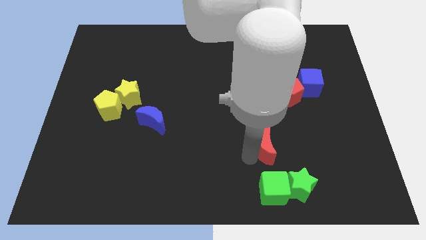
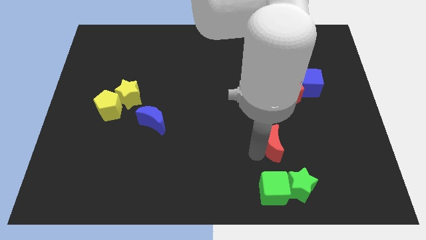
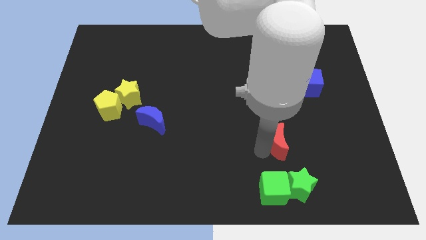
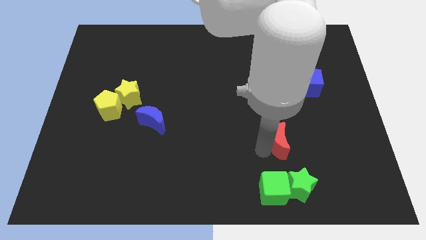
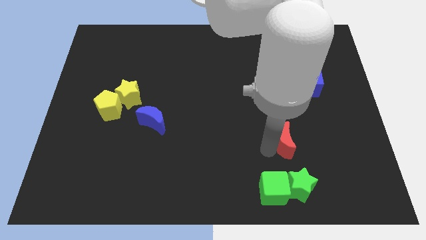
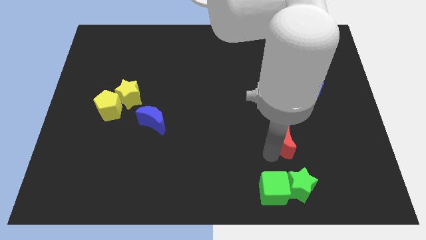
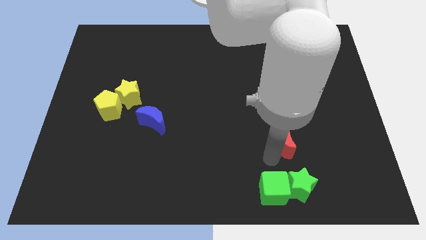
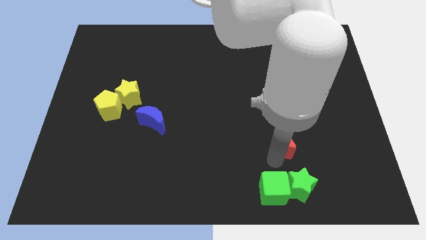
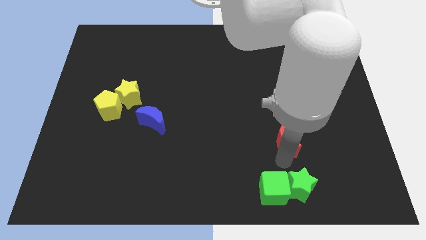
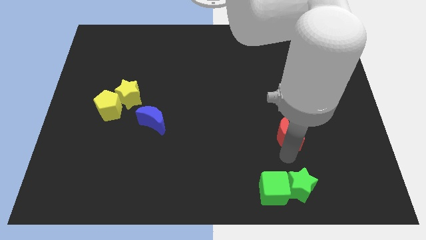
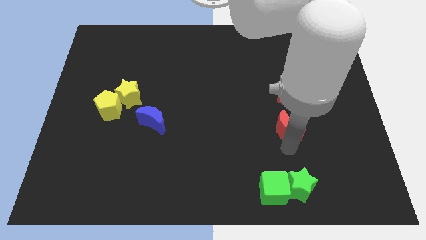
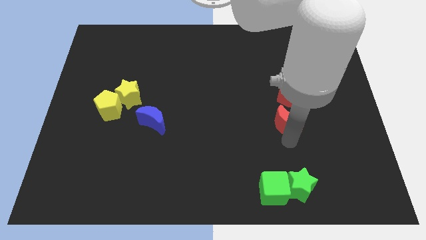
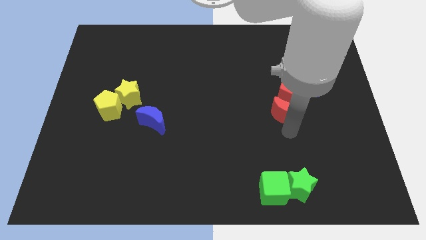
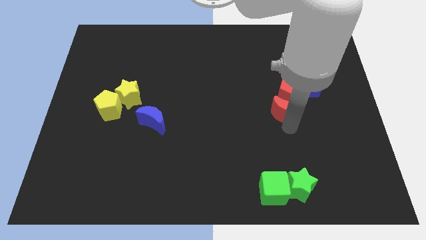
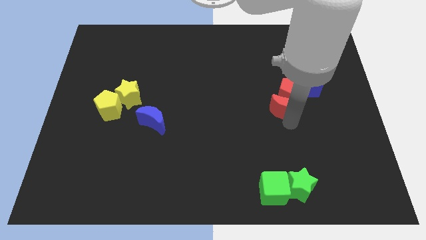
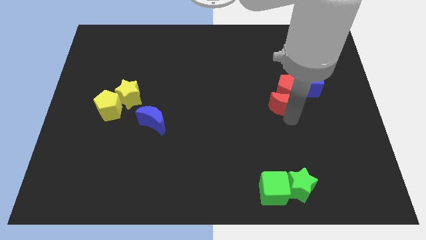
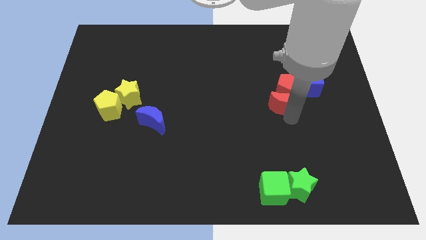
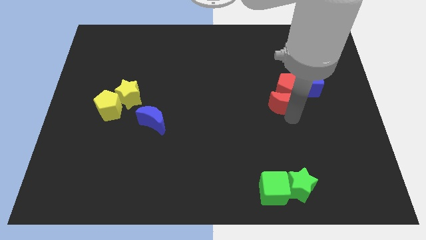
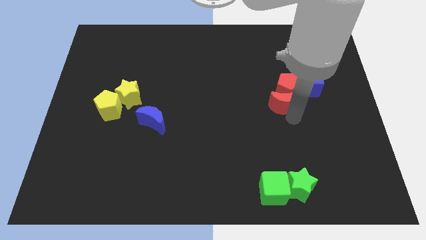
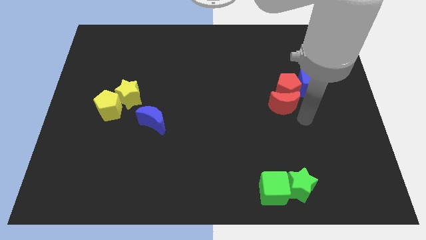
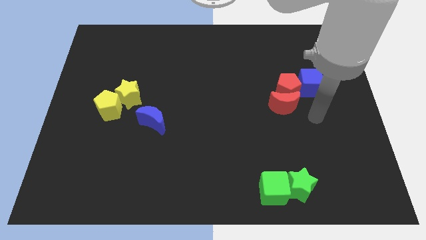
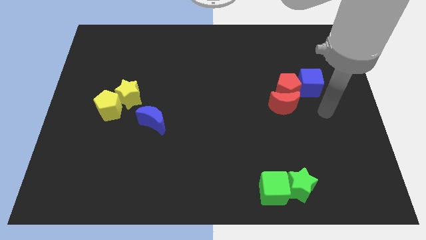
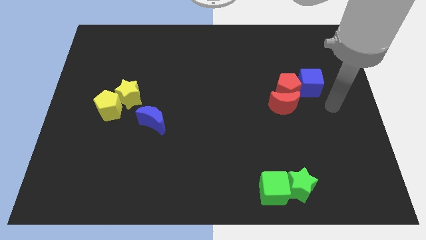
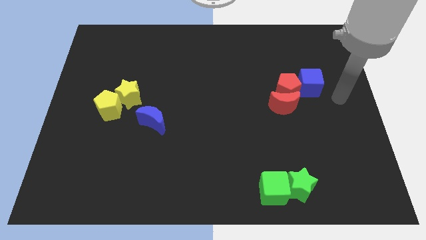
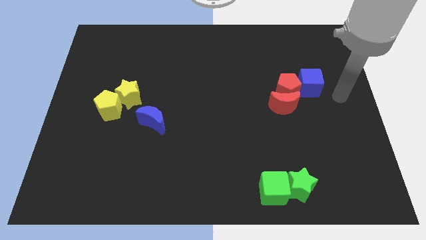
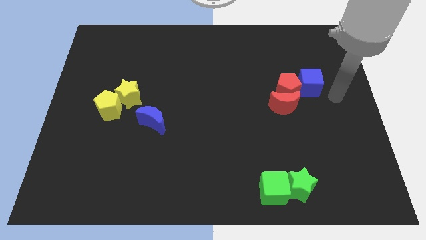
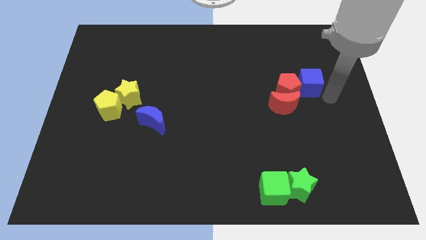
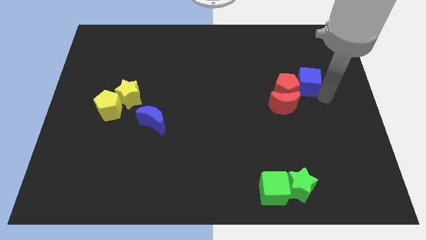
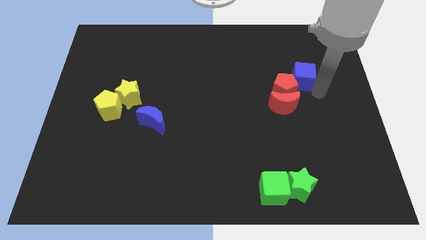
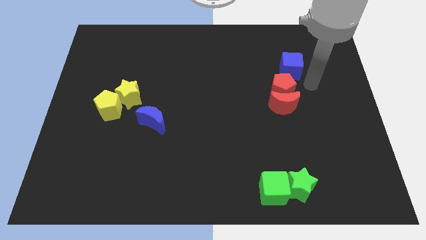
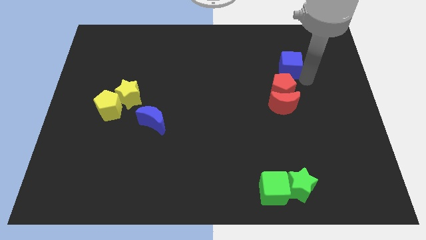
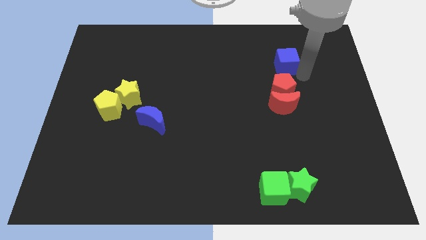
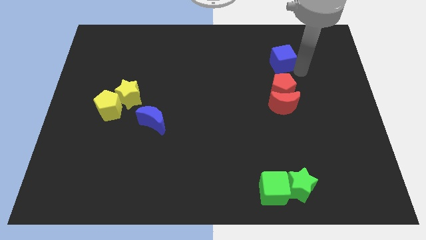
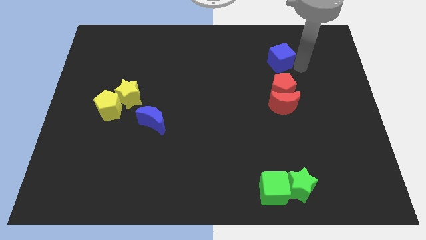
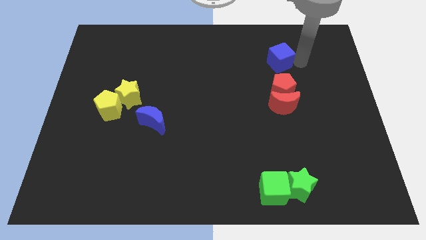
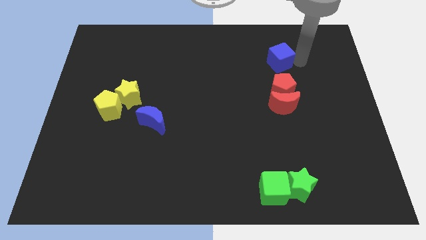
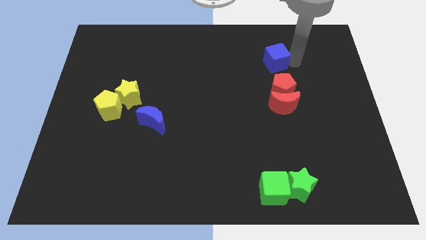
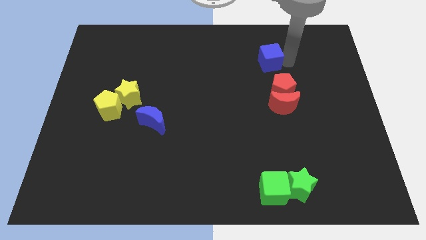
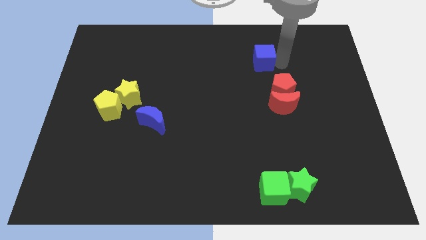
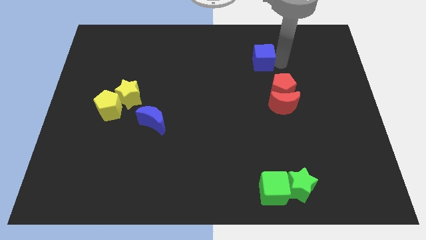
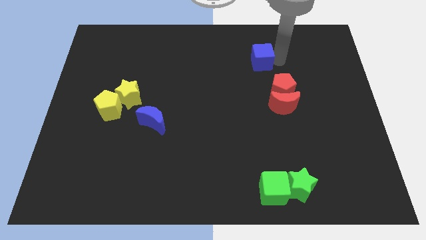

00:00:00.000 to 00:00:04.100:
push the red crescent into the red pentagon

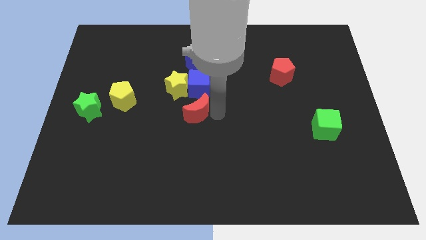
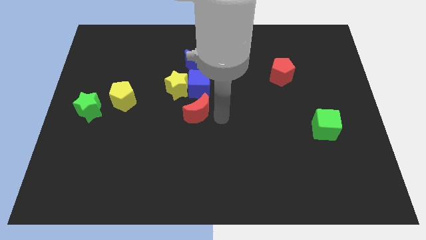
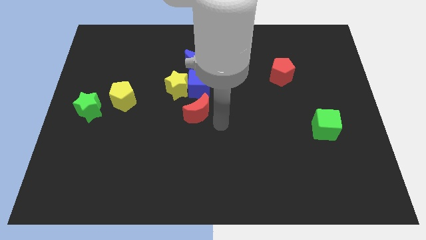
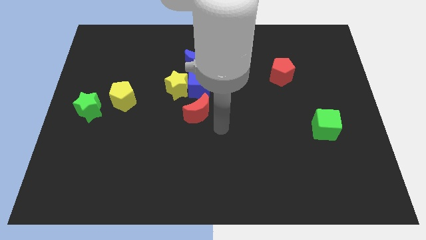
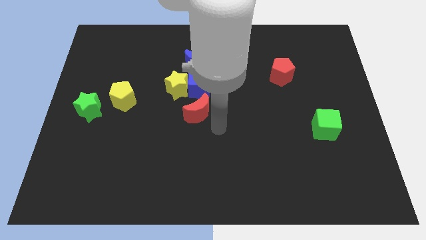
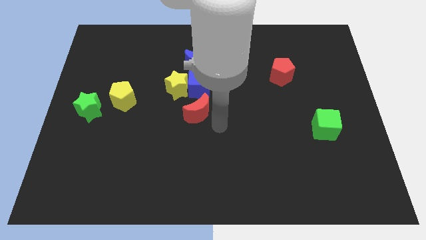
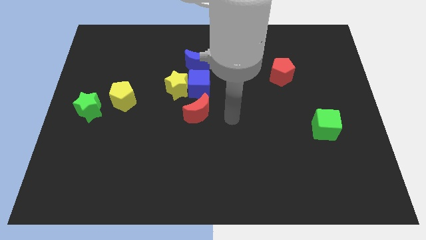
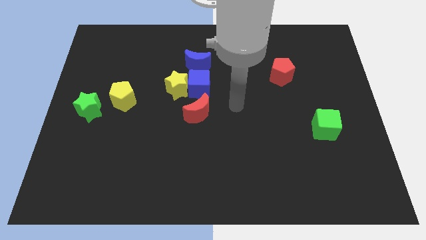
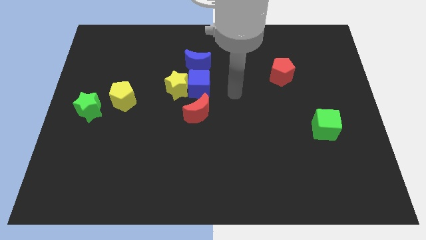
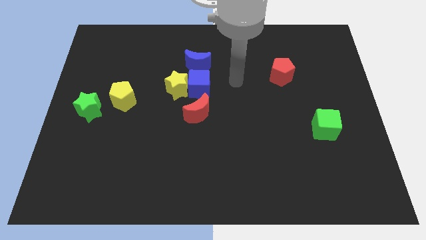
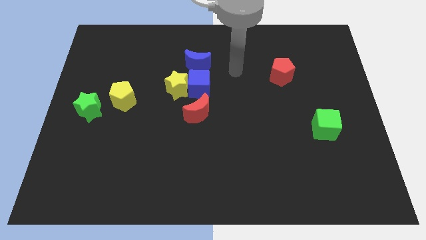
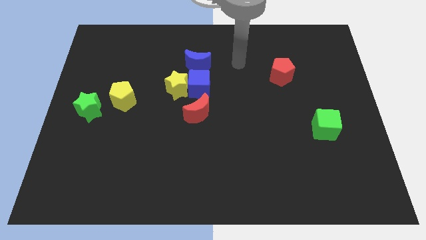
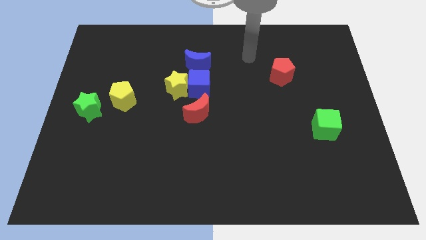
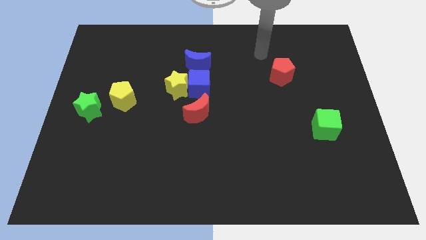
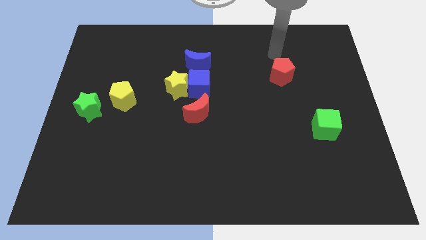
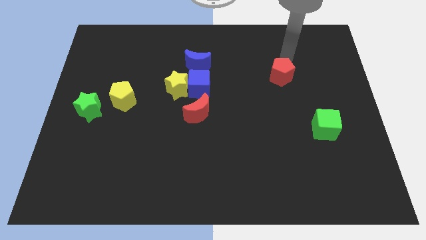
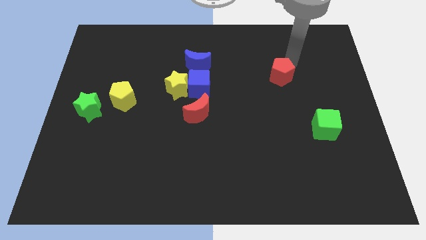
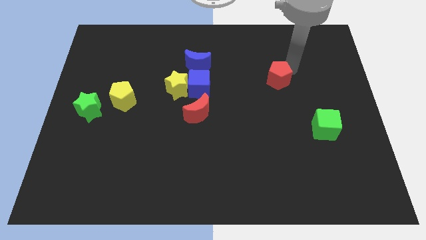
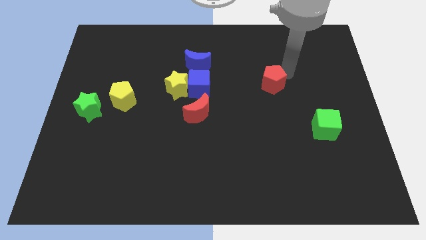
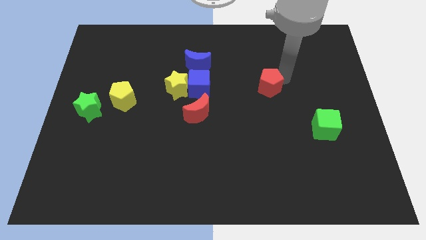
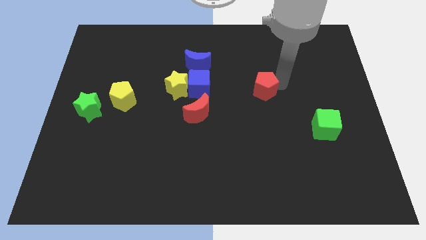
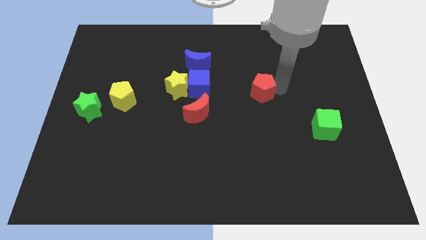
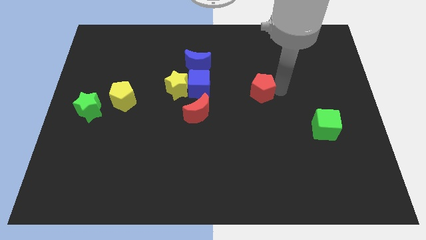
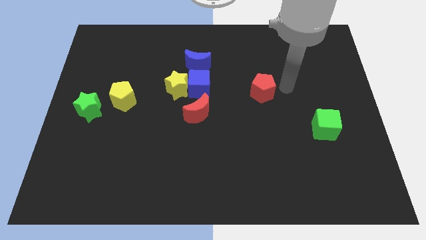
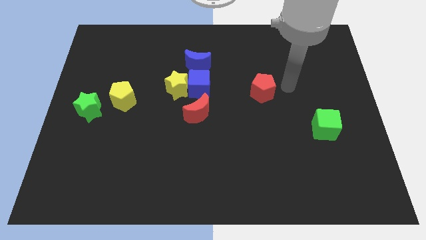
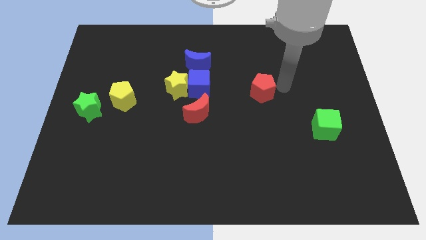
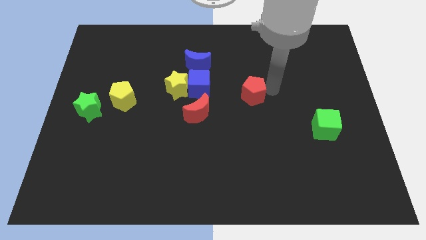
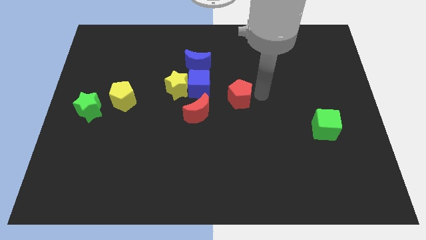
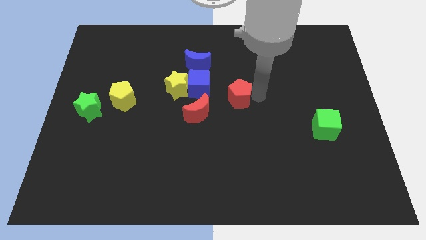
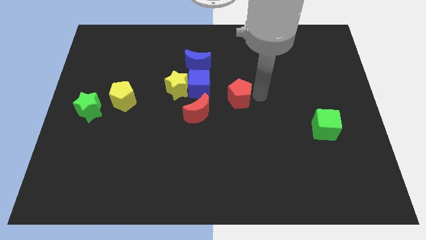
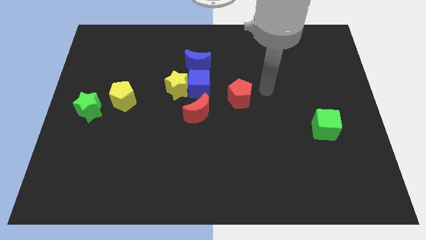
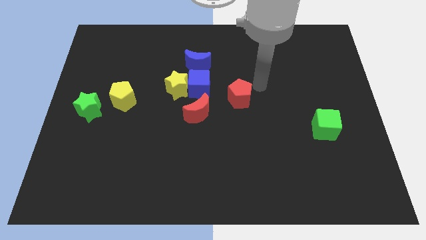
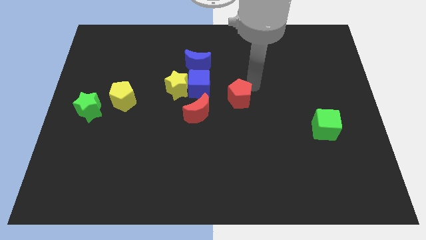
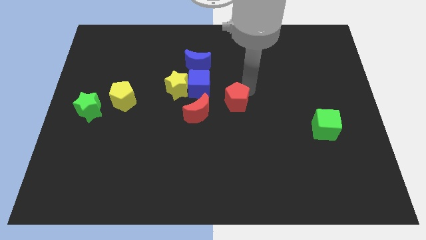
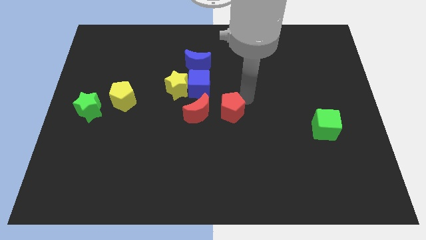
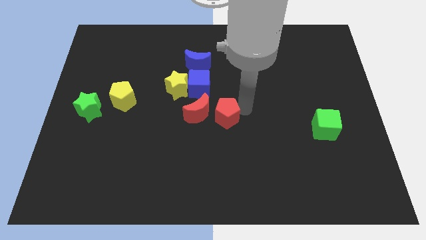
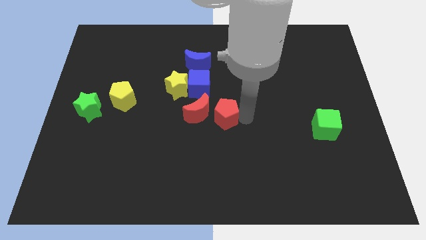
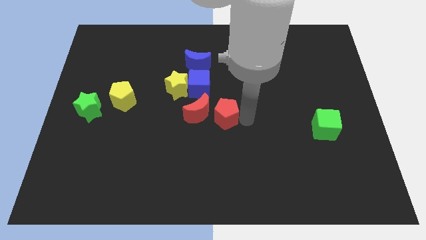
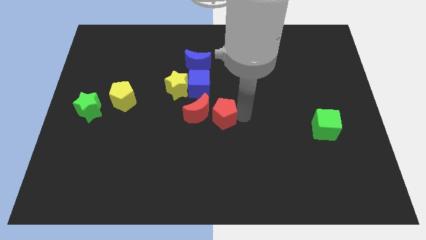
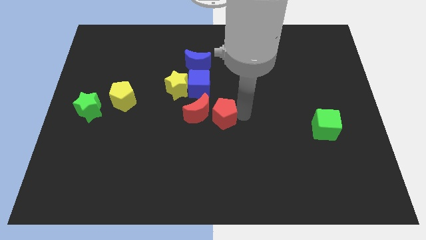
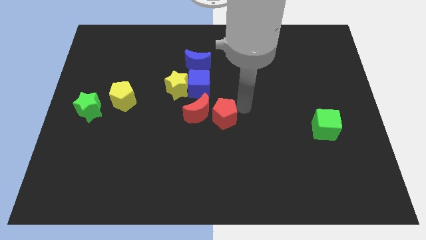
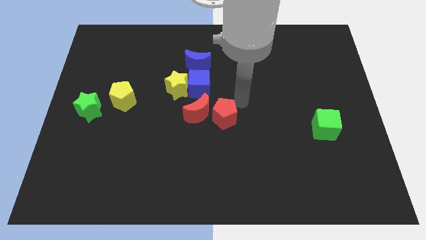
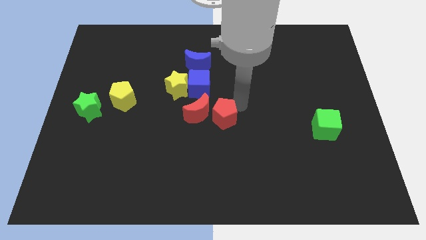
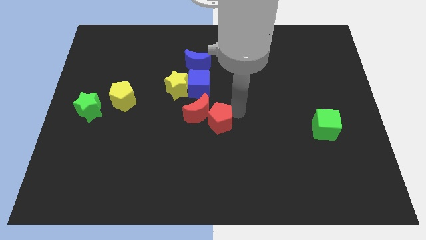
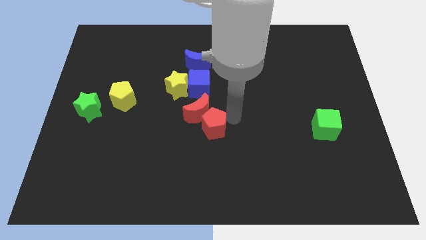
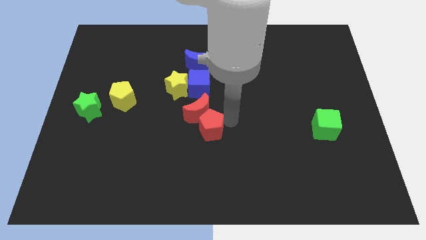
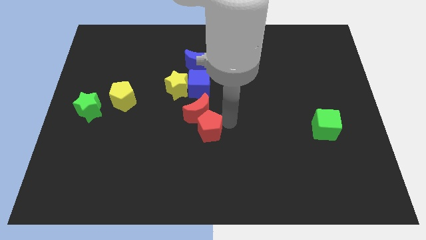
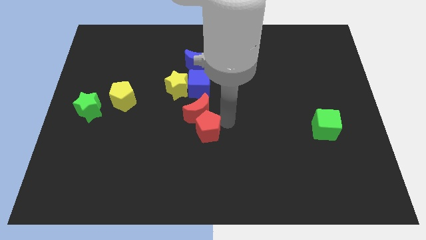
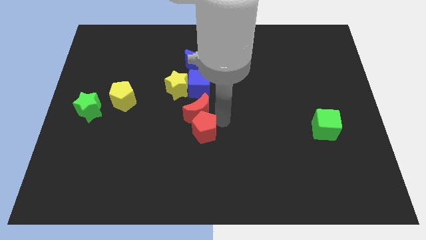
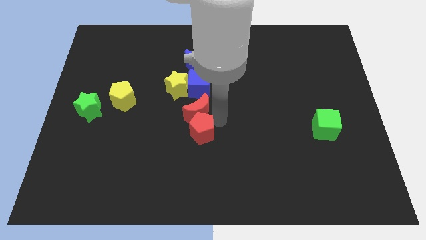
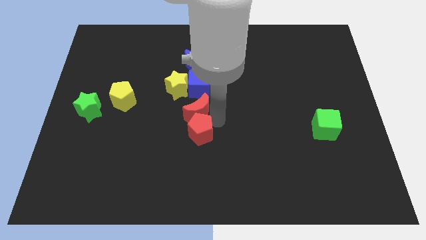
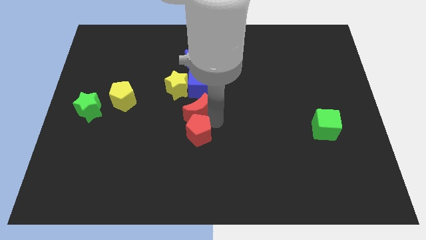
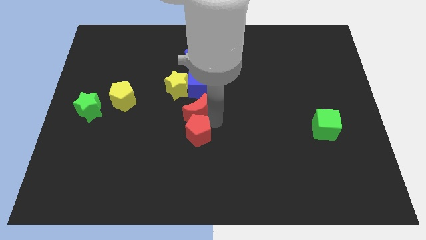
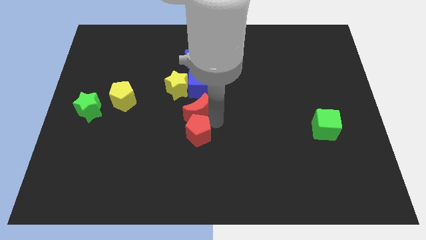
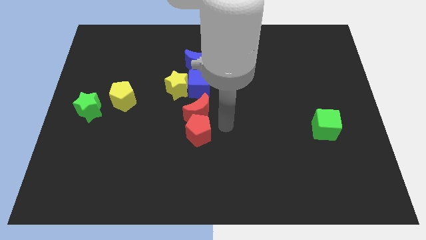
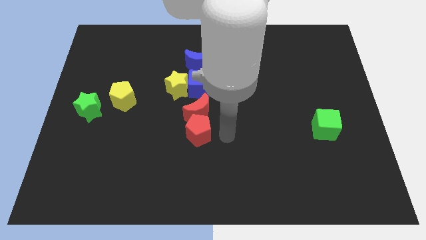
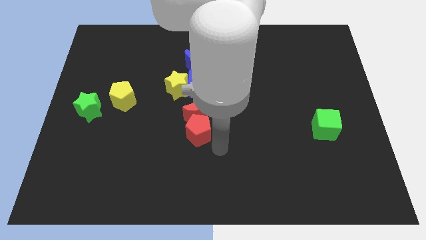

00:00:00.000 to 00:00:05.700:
place the red pentagon to the left of the green cube
